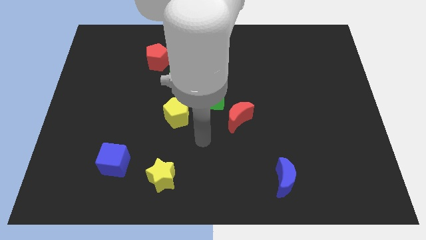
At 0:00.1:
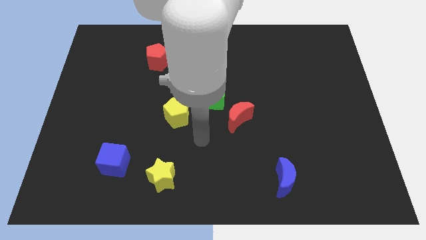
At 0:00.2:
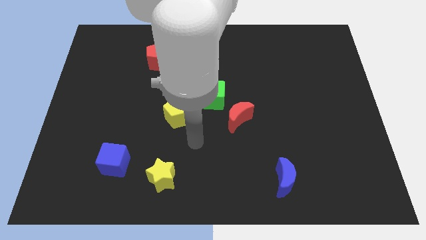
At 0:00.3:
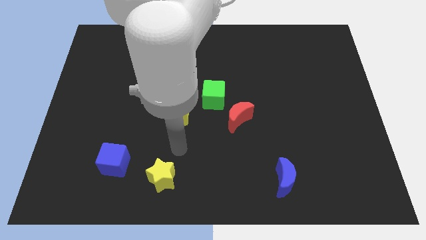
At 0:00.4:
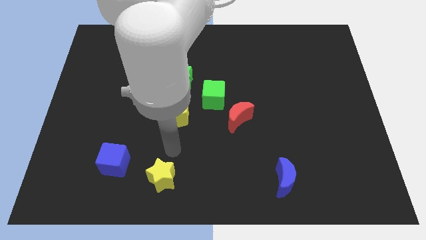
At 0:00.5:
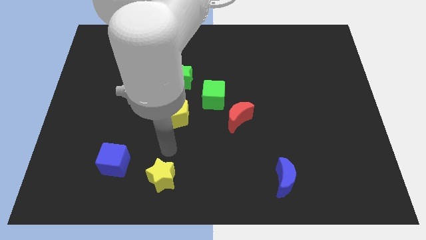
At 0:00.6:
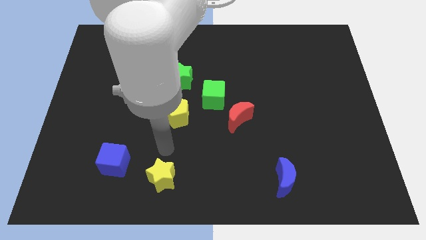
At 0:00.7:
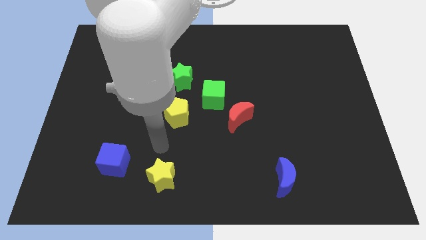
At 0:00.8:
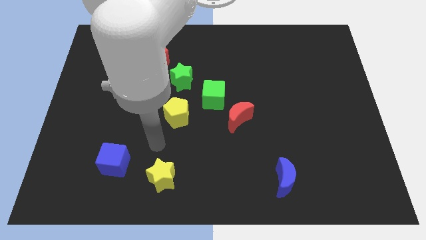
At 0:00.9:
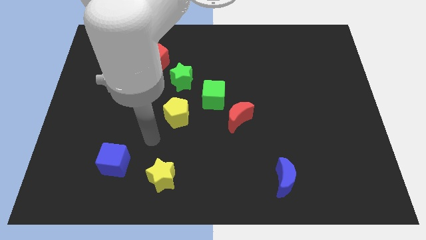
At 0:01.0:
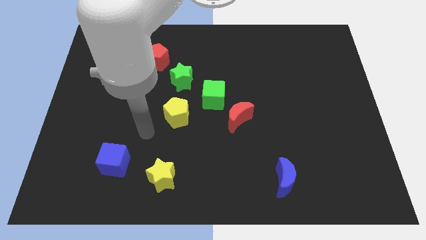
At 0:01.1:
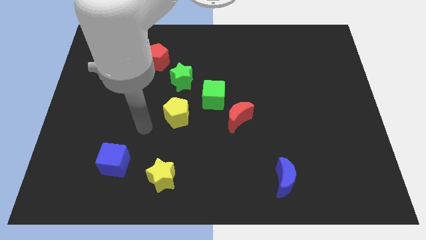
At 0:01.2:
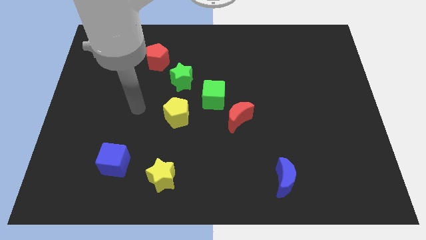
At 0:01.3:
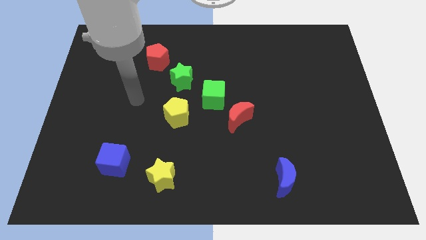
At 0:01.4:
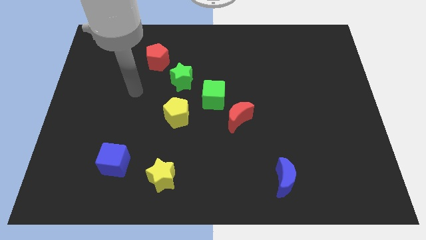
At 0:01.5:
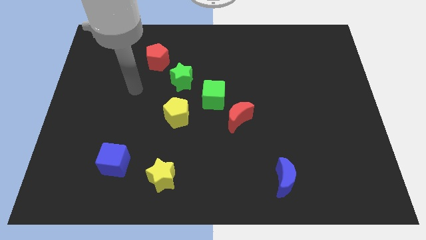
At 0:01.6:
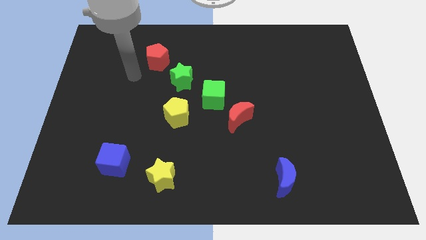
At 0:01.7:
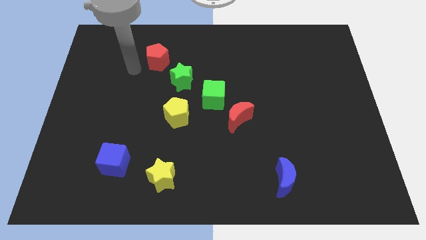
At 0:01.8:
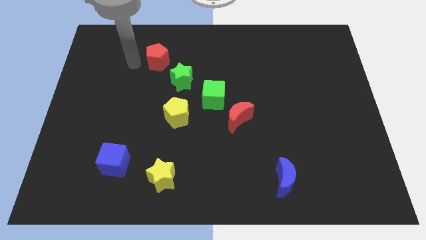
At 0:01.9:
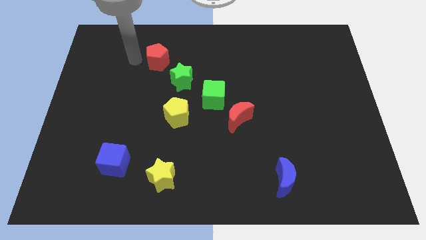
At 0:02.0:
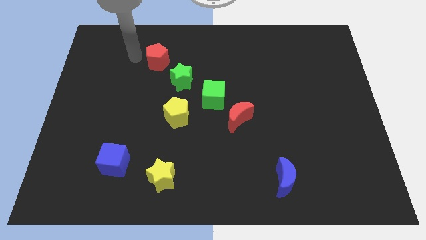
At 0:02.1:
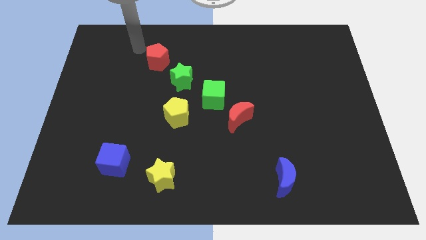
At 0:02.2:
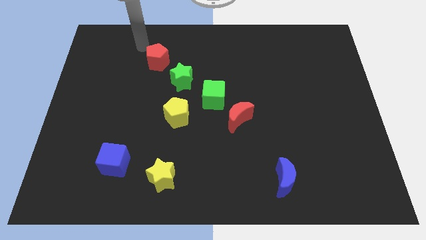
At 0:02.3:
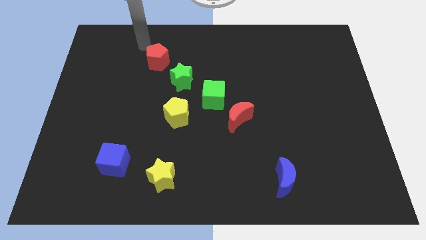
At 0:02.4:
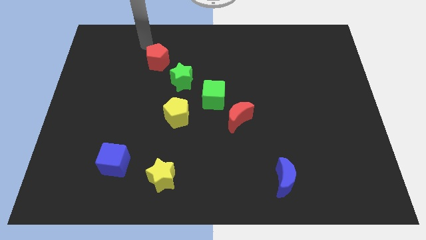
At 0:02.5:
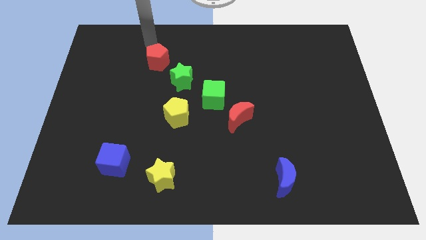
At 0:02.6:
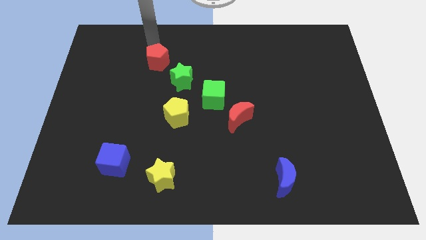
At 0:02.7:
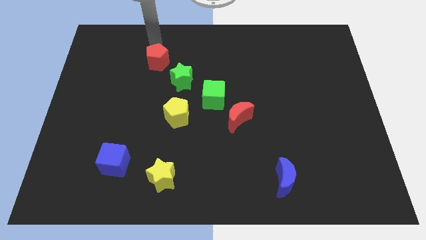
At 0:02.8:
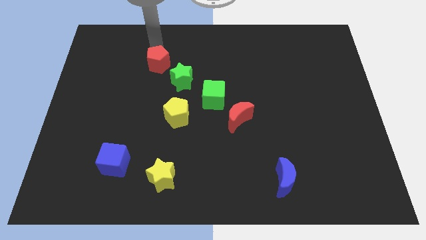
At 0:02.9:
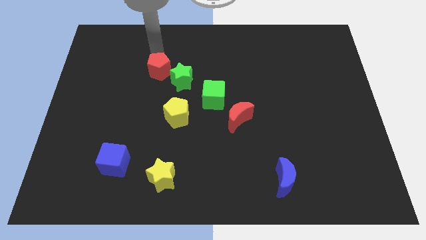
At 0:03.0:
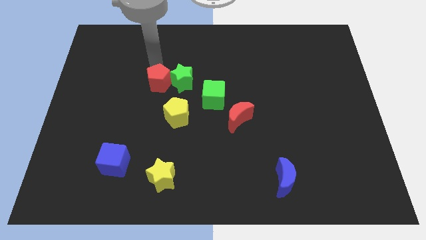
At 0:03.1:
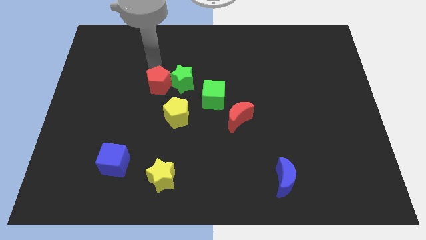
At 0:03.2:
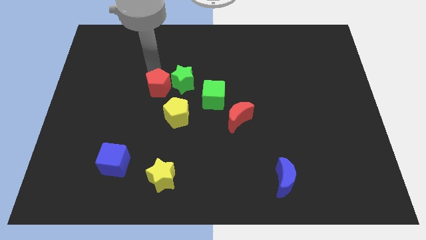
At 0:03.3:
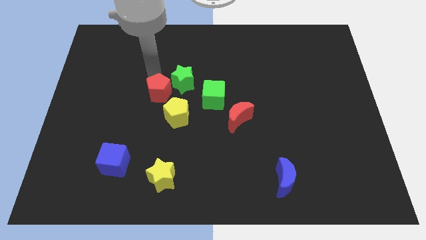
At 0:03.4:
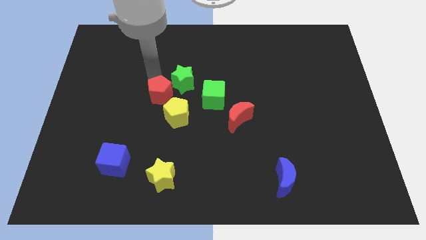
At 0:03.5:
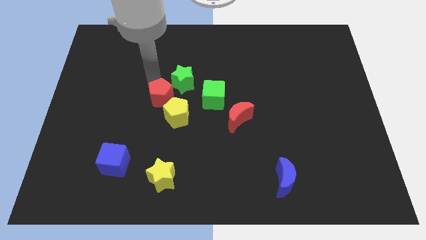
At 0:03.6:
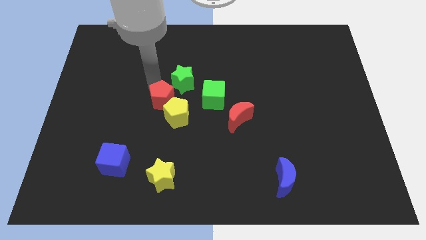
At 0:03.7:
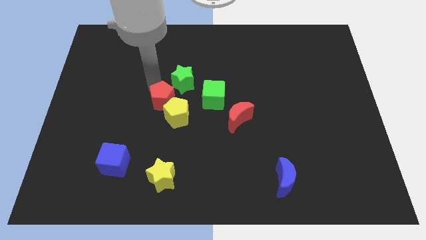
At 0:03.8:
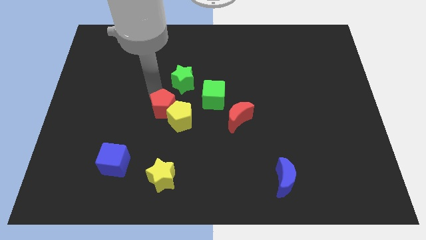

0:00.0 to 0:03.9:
push the red pentagon close to the yellow pentagon

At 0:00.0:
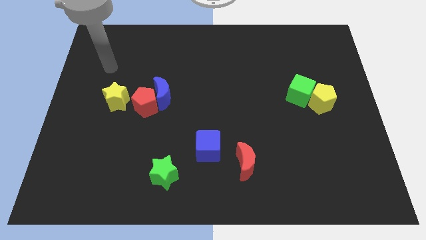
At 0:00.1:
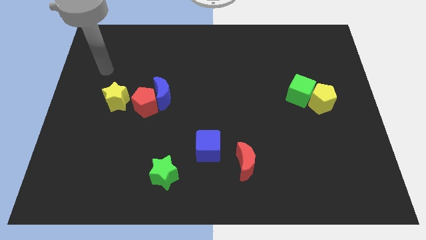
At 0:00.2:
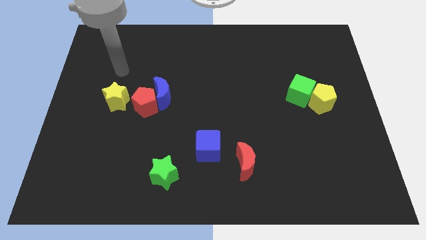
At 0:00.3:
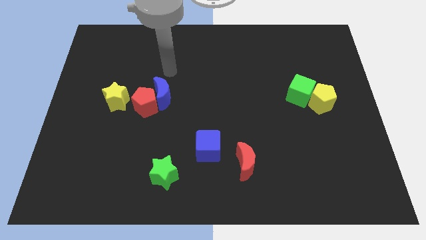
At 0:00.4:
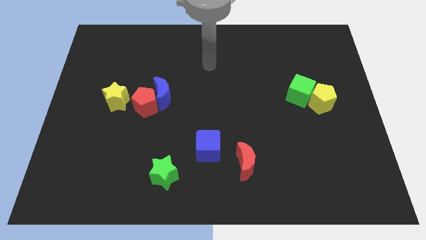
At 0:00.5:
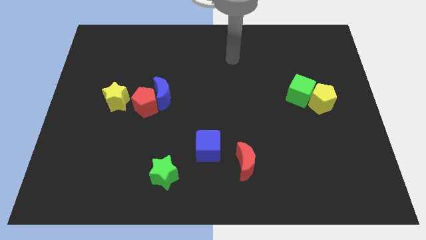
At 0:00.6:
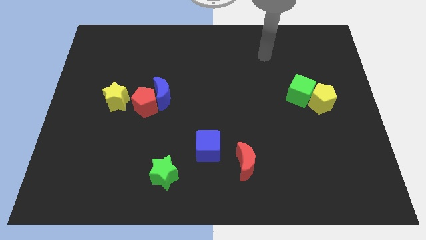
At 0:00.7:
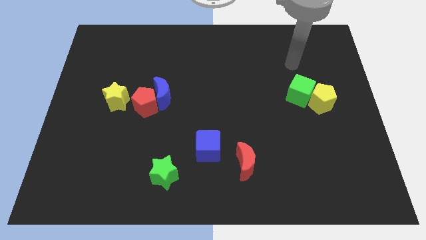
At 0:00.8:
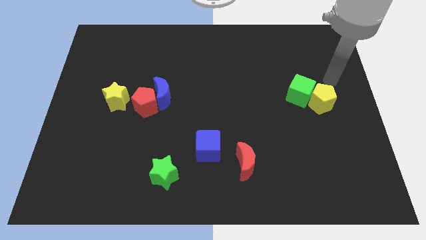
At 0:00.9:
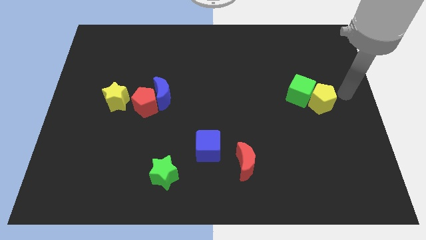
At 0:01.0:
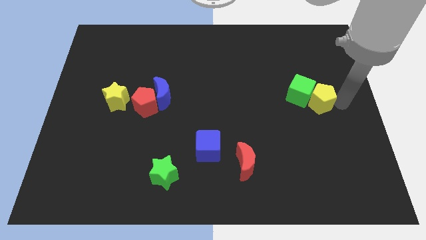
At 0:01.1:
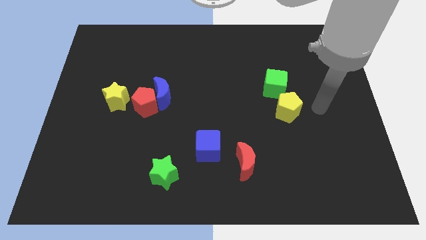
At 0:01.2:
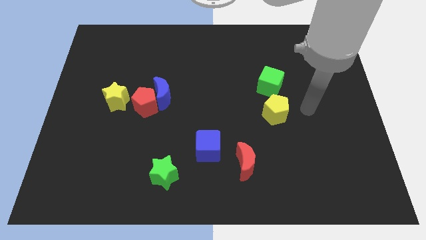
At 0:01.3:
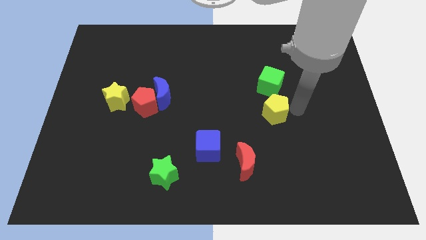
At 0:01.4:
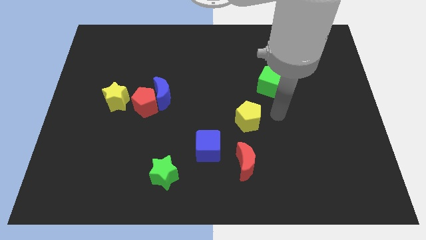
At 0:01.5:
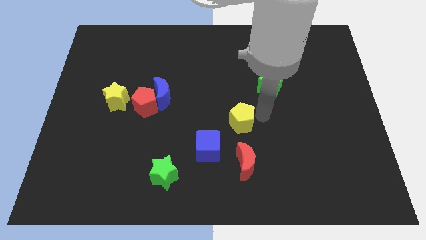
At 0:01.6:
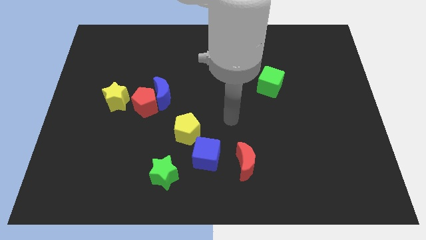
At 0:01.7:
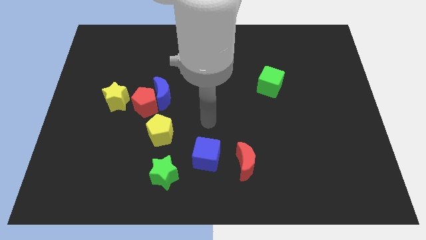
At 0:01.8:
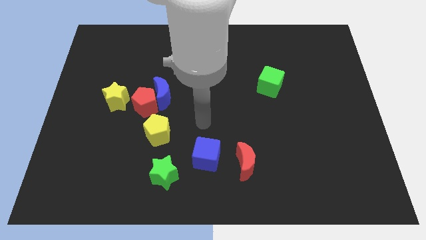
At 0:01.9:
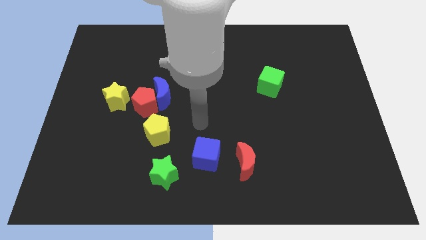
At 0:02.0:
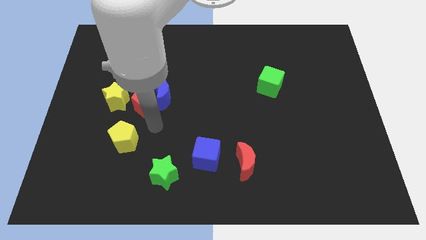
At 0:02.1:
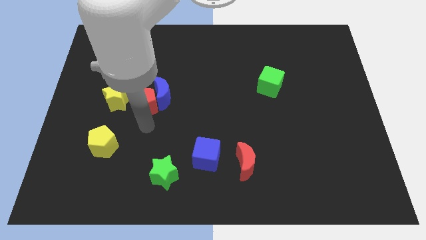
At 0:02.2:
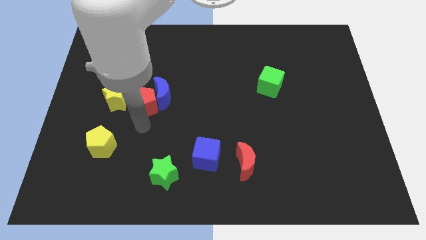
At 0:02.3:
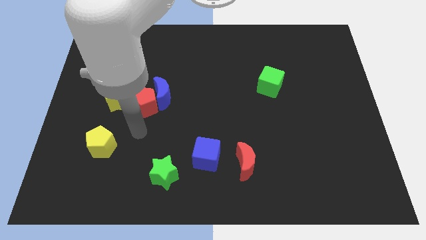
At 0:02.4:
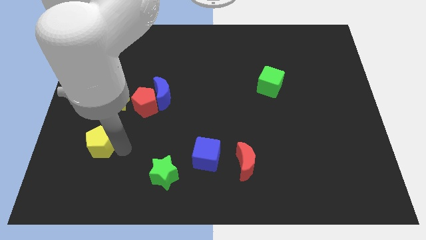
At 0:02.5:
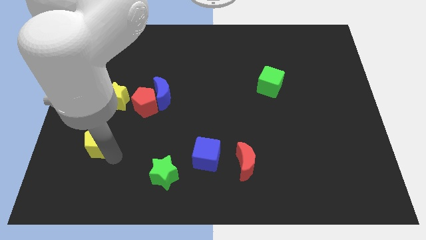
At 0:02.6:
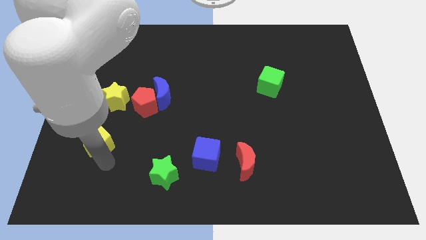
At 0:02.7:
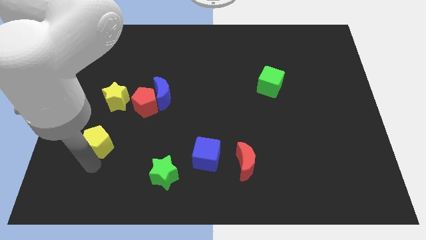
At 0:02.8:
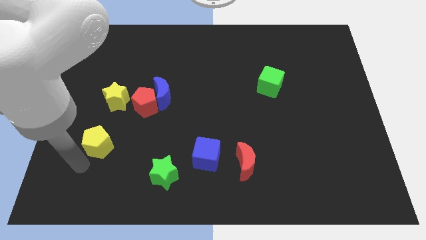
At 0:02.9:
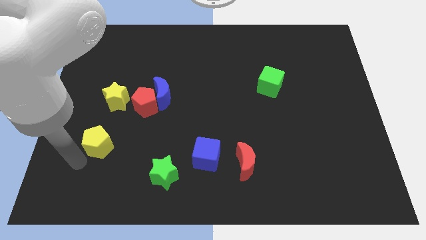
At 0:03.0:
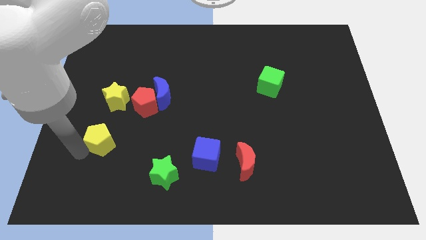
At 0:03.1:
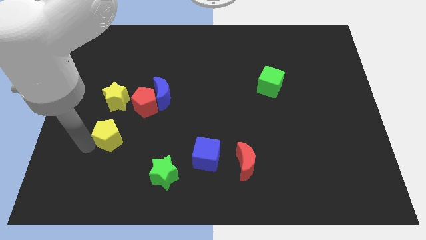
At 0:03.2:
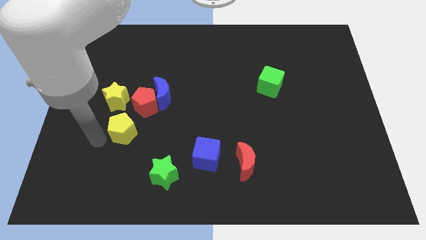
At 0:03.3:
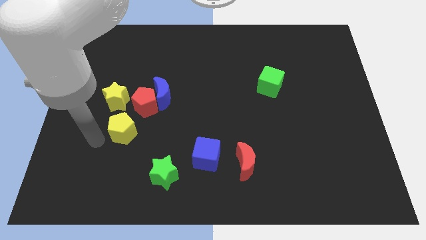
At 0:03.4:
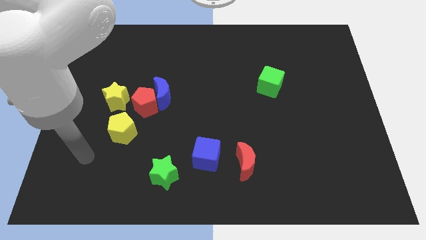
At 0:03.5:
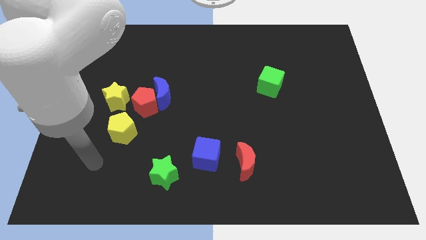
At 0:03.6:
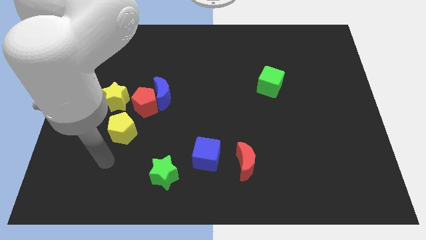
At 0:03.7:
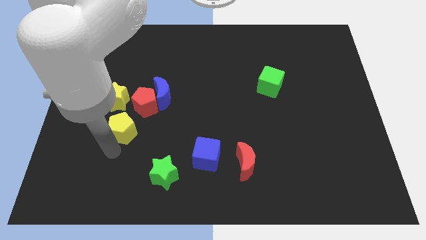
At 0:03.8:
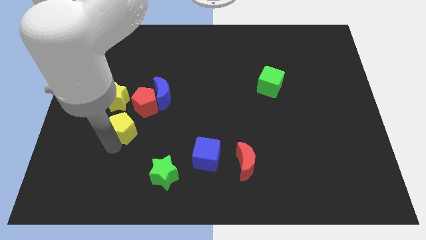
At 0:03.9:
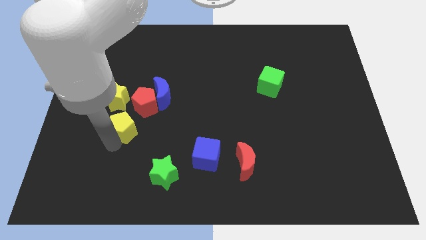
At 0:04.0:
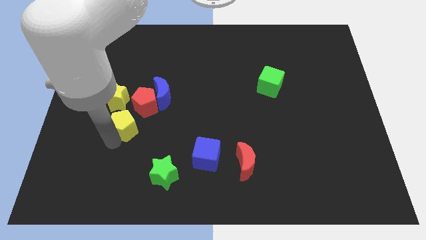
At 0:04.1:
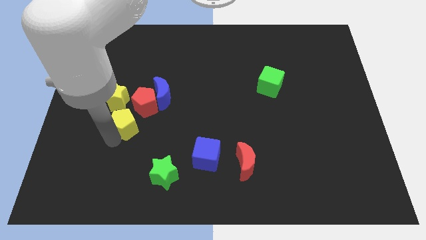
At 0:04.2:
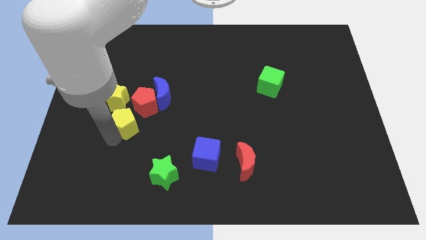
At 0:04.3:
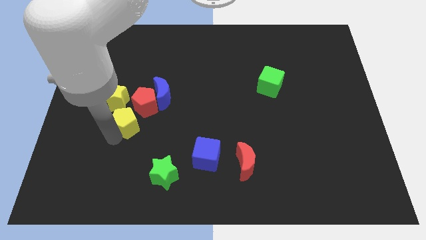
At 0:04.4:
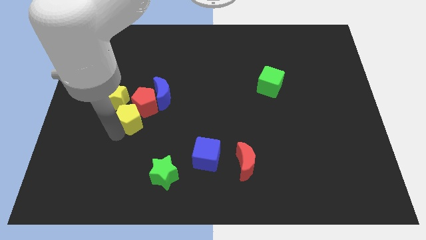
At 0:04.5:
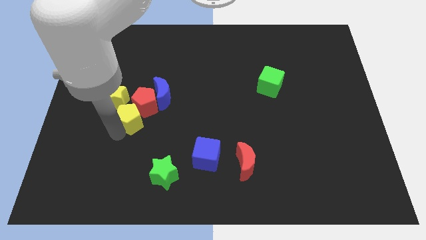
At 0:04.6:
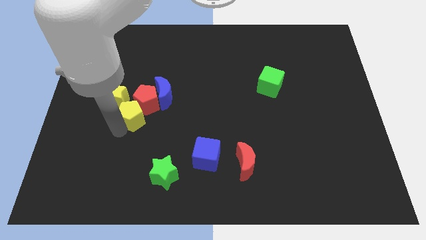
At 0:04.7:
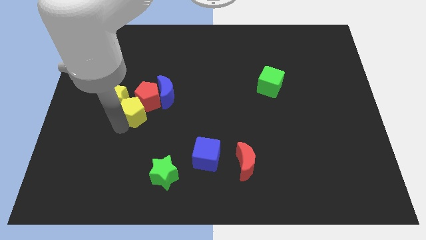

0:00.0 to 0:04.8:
slide the yellow pentagon close to the yellow star
